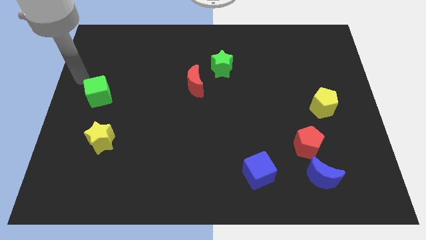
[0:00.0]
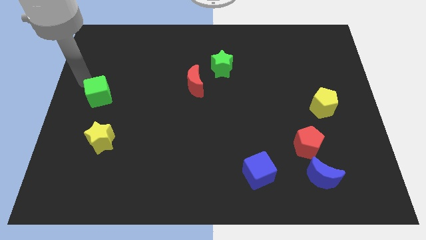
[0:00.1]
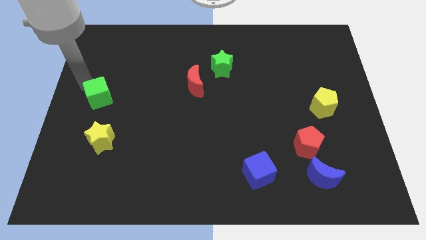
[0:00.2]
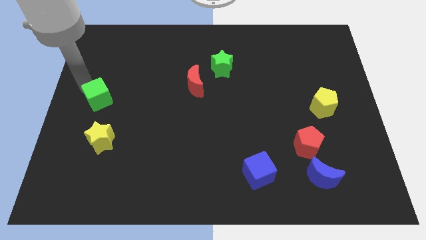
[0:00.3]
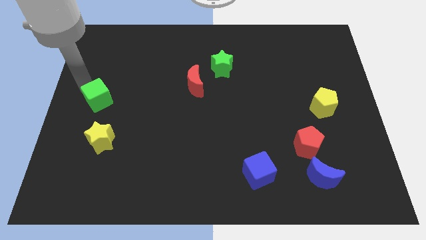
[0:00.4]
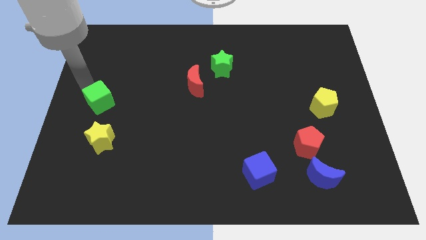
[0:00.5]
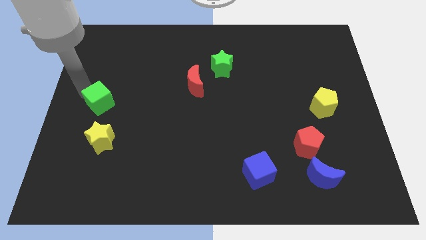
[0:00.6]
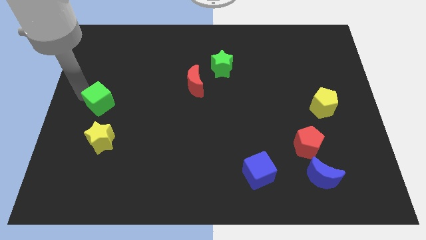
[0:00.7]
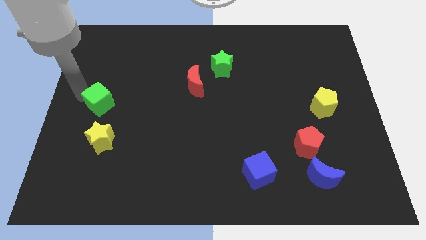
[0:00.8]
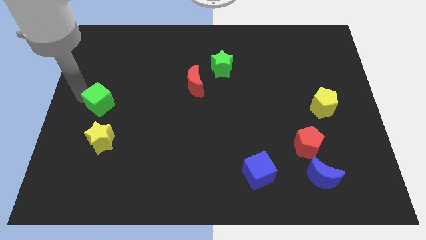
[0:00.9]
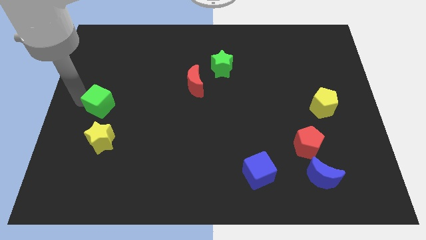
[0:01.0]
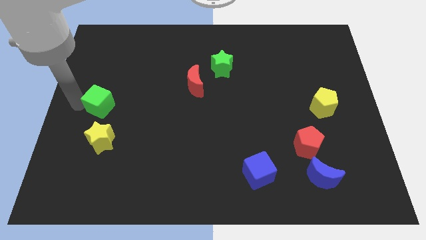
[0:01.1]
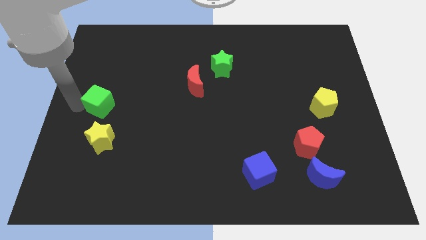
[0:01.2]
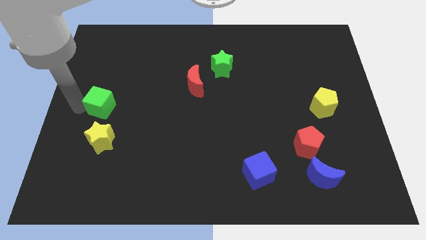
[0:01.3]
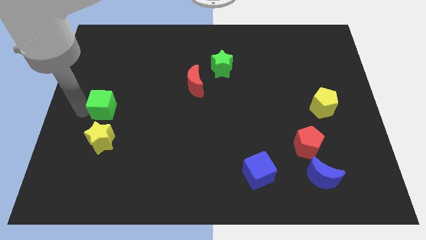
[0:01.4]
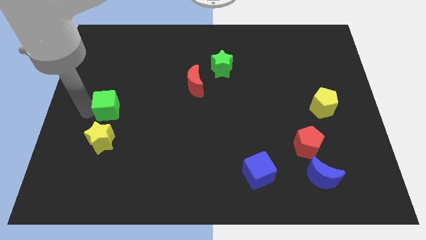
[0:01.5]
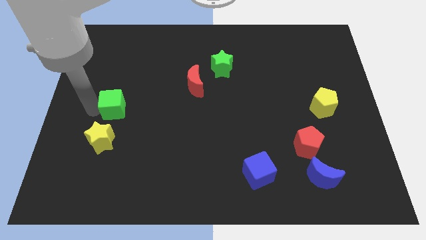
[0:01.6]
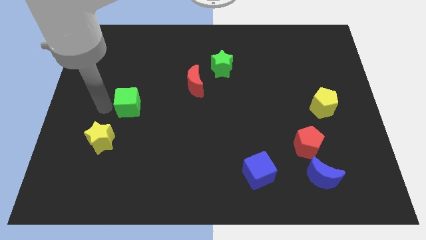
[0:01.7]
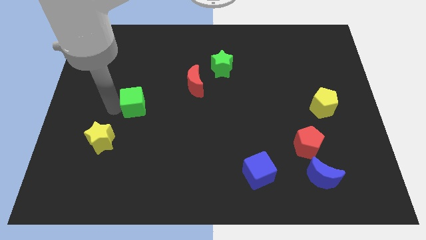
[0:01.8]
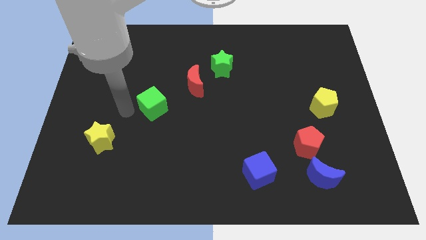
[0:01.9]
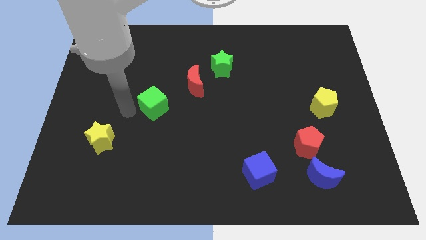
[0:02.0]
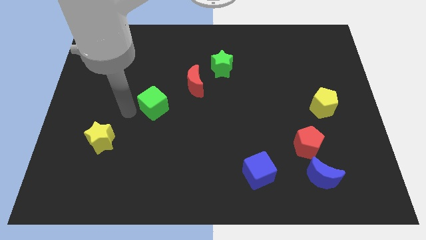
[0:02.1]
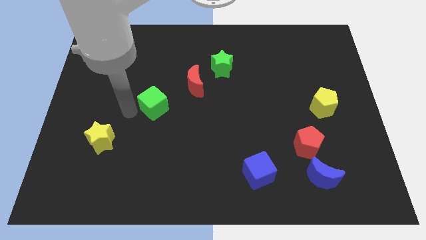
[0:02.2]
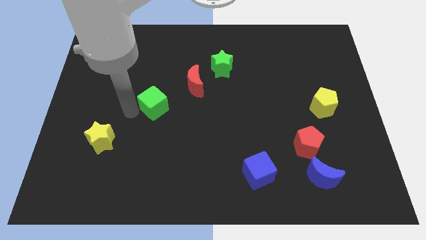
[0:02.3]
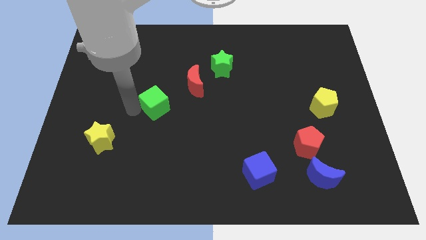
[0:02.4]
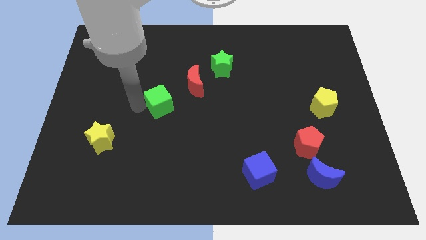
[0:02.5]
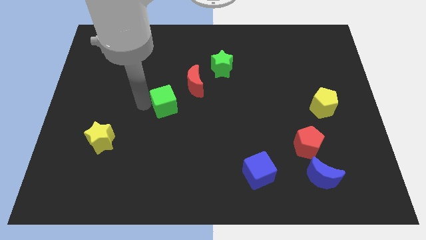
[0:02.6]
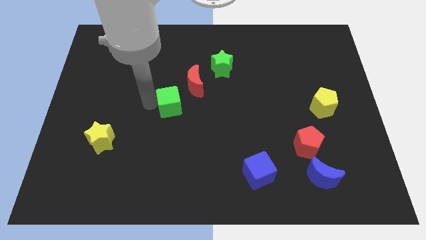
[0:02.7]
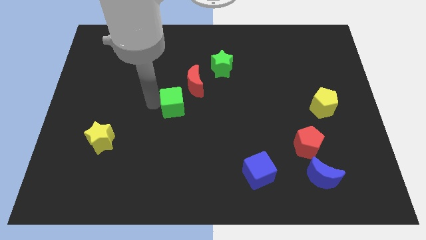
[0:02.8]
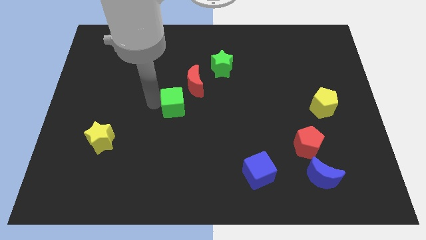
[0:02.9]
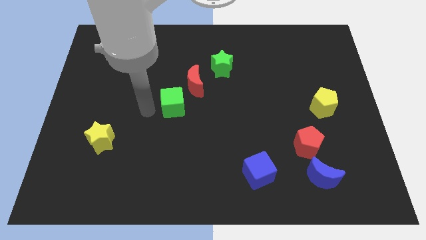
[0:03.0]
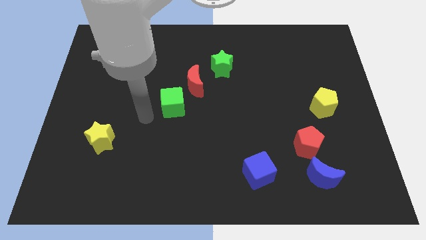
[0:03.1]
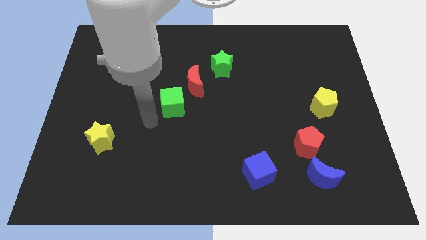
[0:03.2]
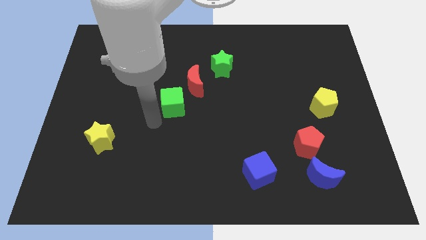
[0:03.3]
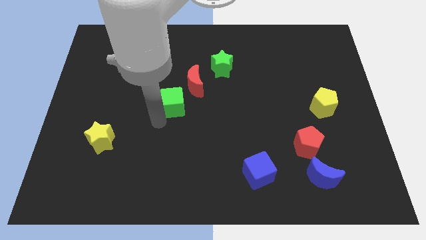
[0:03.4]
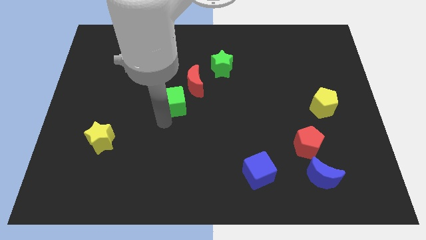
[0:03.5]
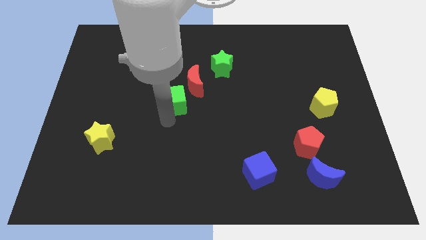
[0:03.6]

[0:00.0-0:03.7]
push the green cube towards the red moon

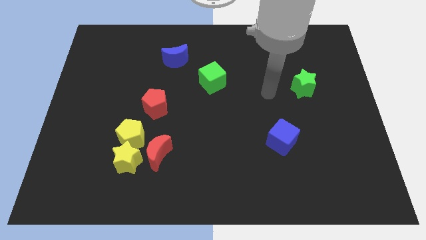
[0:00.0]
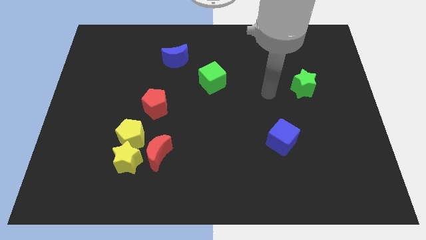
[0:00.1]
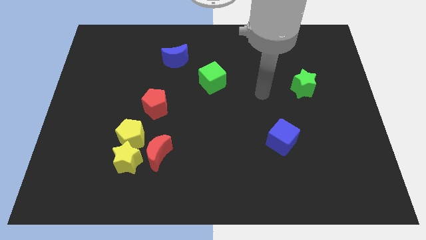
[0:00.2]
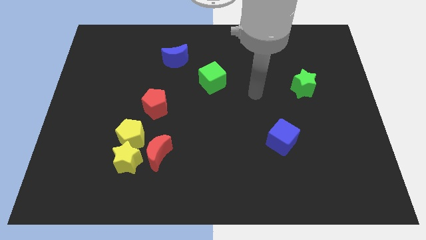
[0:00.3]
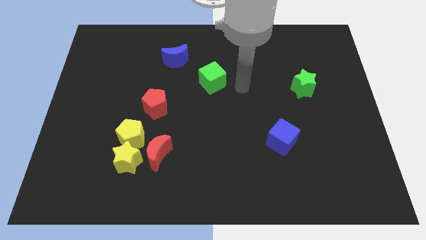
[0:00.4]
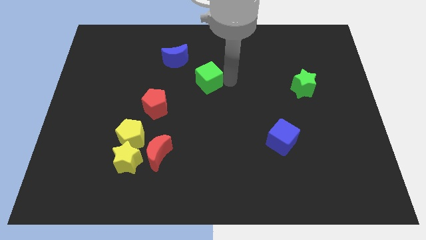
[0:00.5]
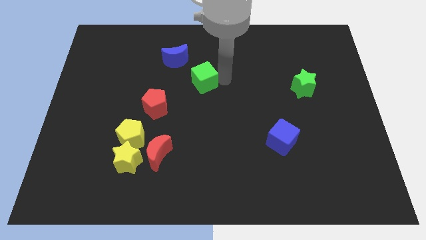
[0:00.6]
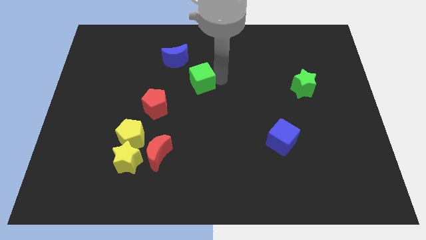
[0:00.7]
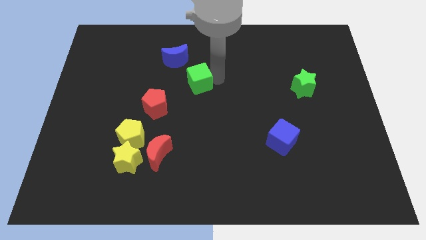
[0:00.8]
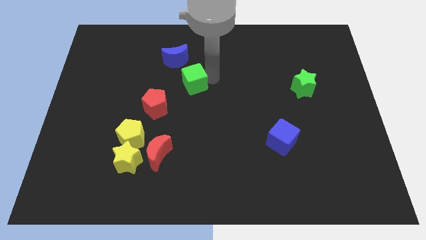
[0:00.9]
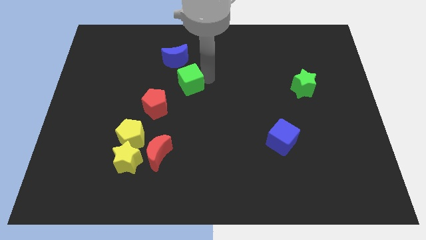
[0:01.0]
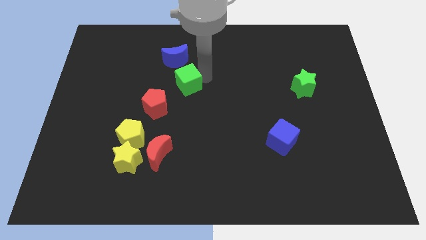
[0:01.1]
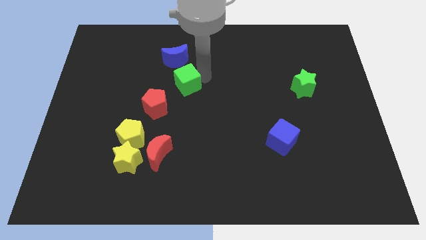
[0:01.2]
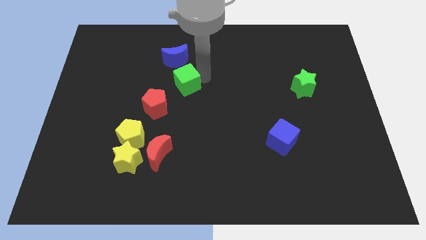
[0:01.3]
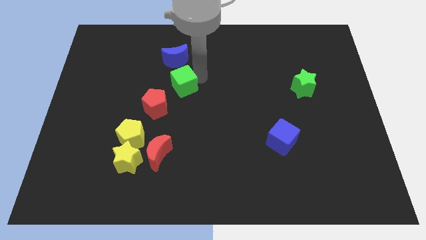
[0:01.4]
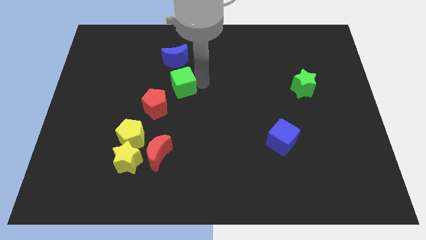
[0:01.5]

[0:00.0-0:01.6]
move the green cube towards the left

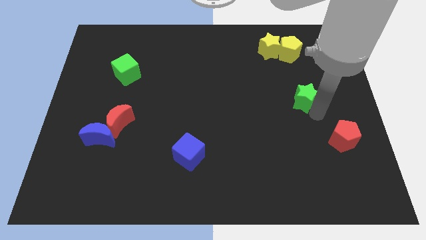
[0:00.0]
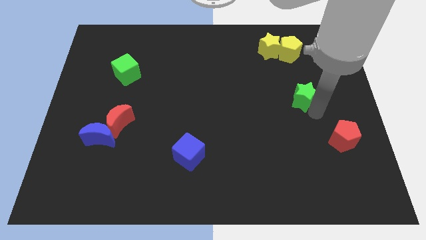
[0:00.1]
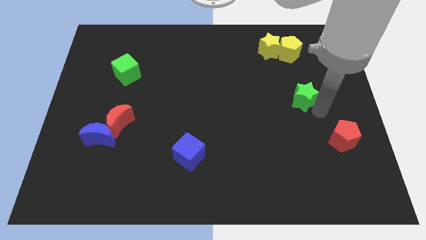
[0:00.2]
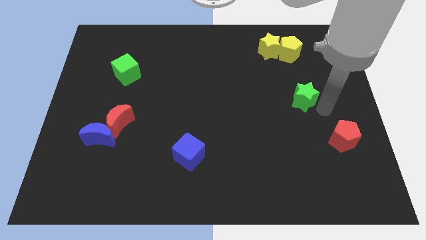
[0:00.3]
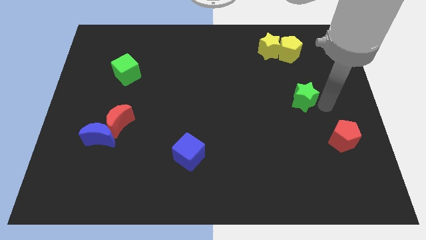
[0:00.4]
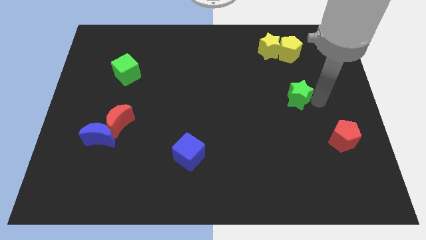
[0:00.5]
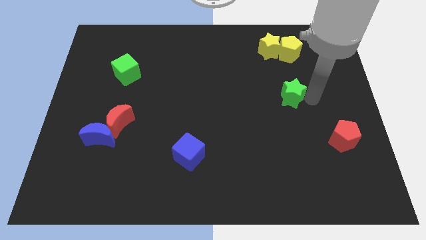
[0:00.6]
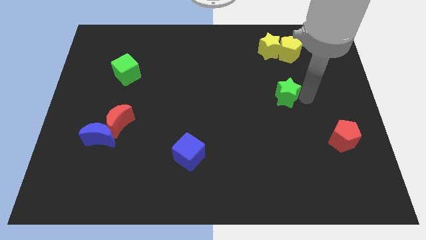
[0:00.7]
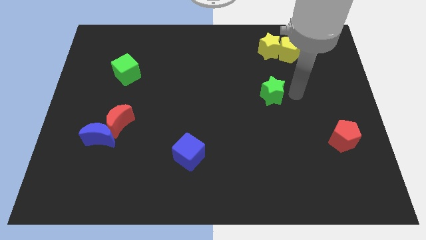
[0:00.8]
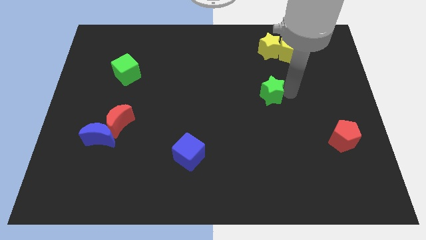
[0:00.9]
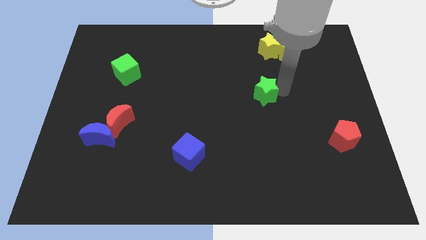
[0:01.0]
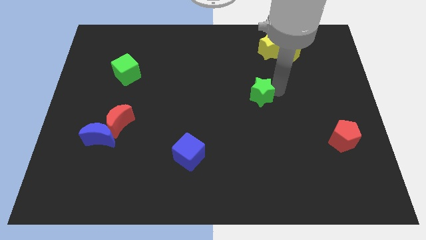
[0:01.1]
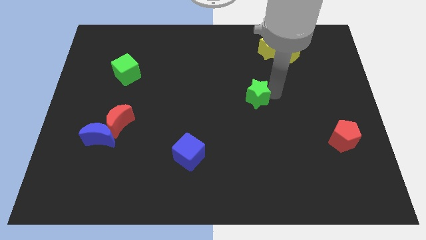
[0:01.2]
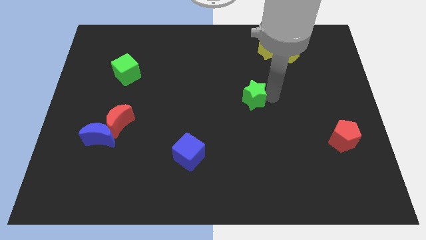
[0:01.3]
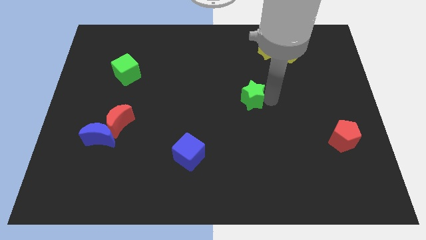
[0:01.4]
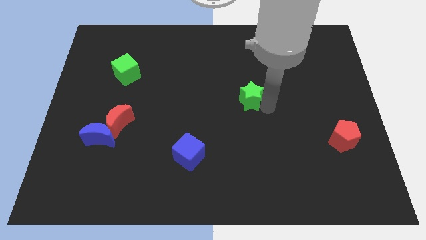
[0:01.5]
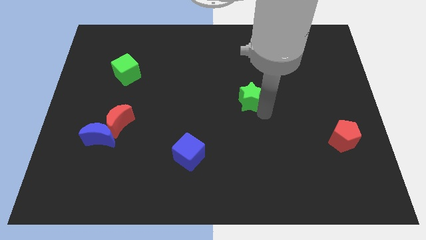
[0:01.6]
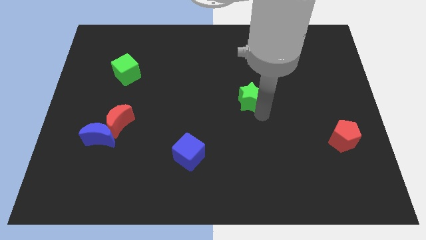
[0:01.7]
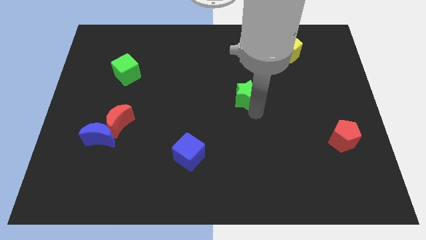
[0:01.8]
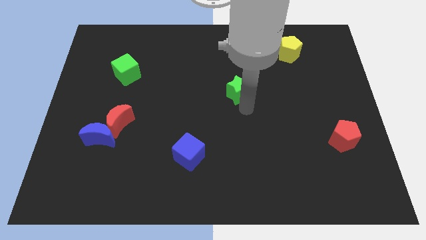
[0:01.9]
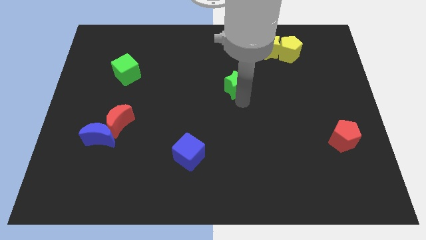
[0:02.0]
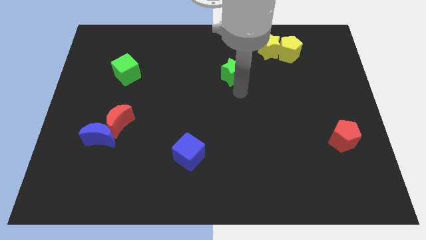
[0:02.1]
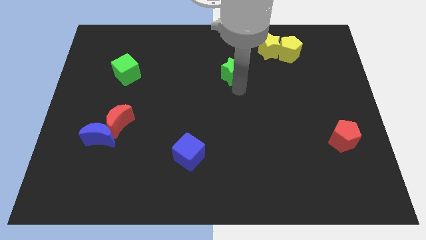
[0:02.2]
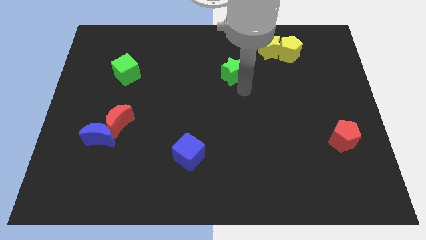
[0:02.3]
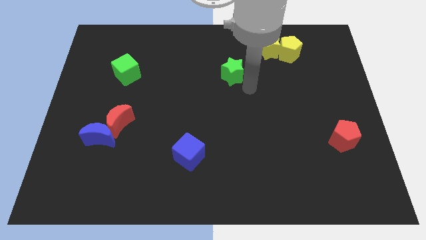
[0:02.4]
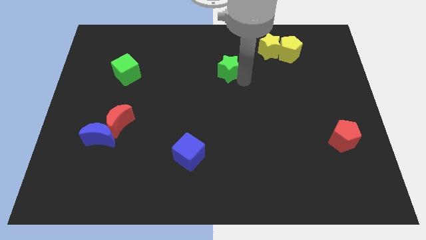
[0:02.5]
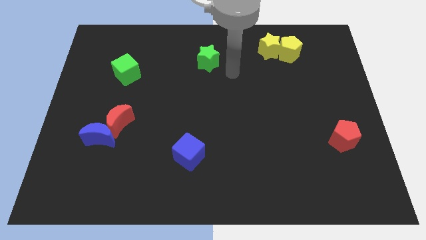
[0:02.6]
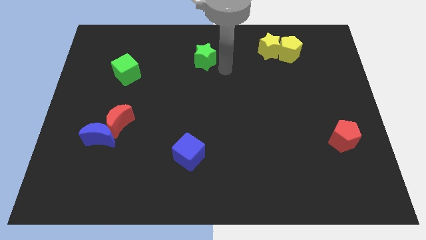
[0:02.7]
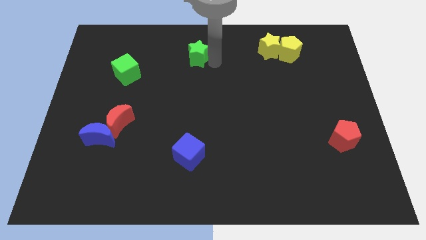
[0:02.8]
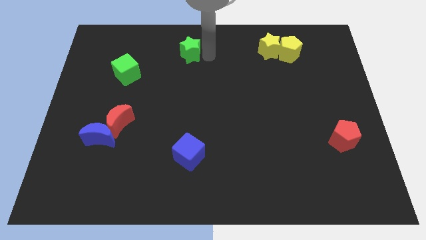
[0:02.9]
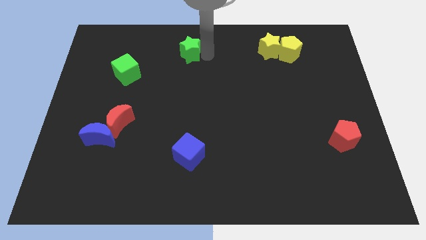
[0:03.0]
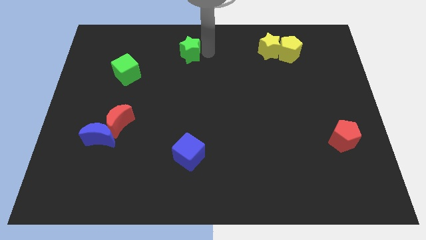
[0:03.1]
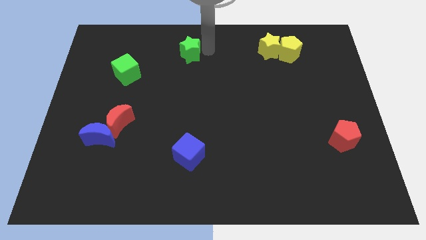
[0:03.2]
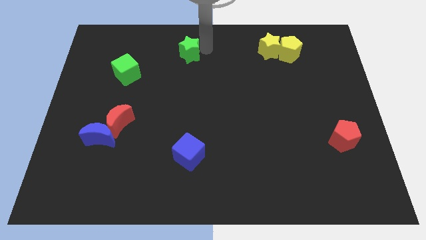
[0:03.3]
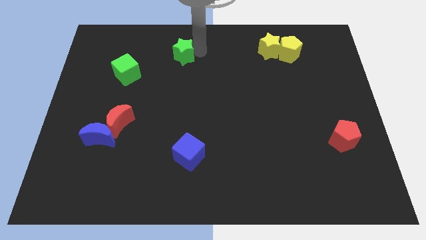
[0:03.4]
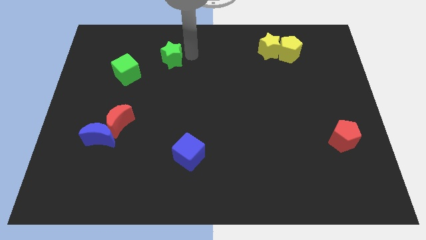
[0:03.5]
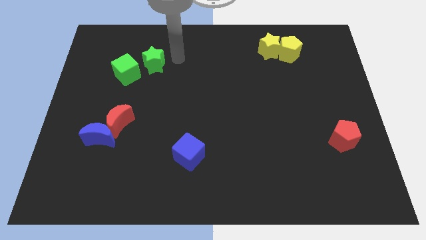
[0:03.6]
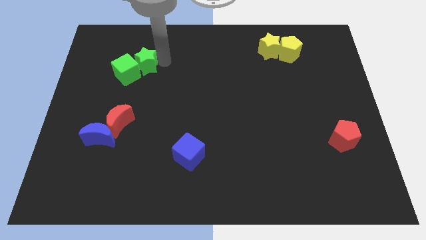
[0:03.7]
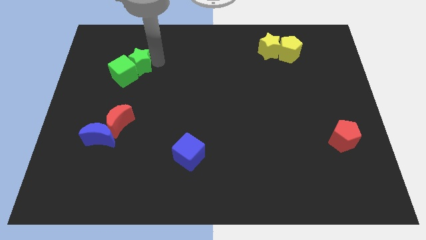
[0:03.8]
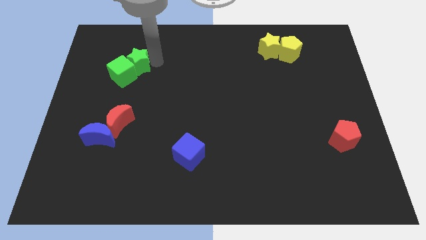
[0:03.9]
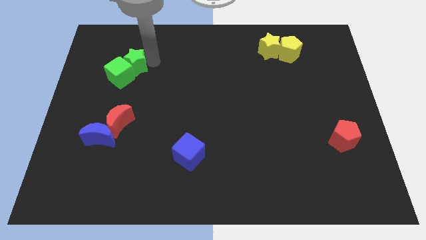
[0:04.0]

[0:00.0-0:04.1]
move the green star into the right side of the green cube
